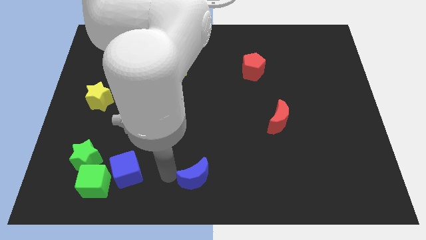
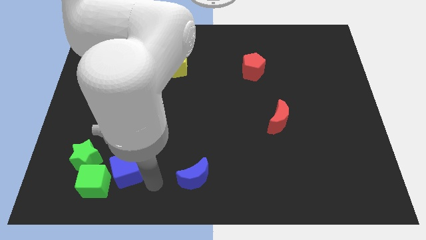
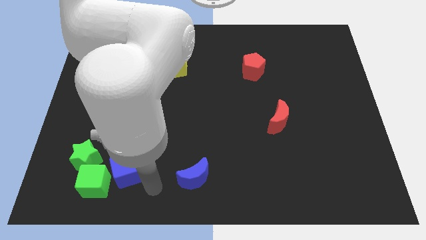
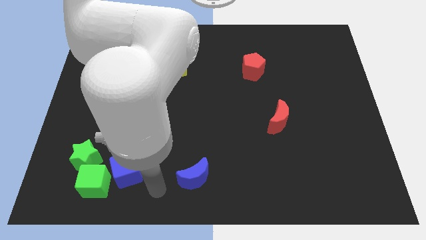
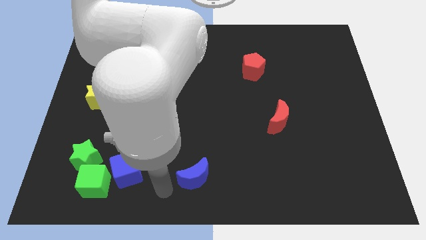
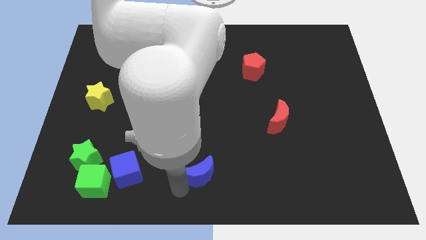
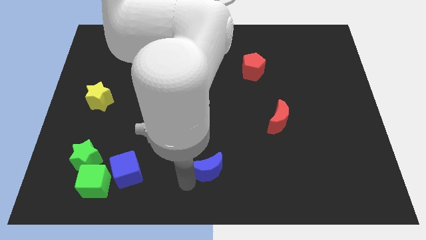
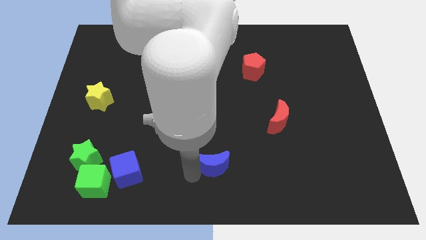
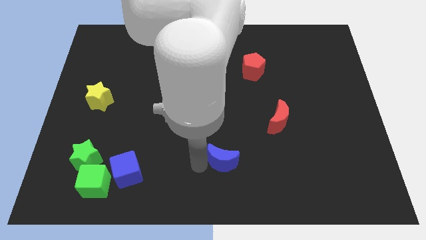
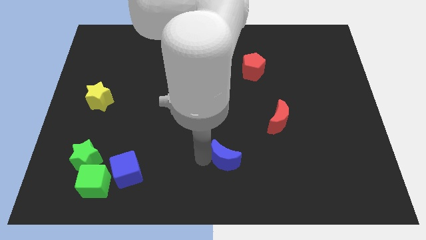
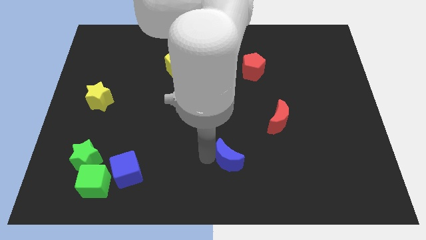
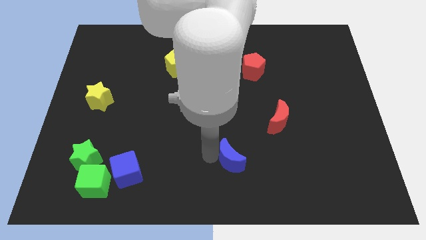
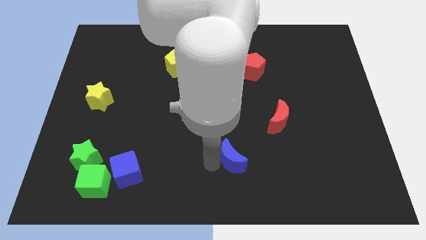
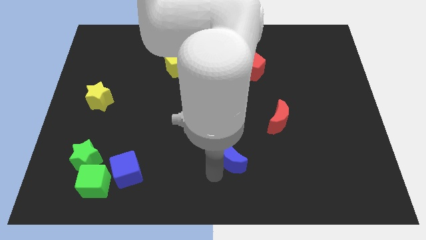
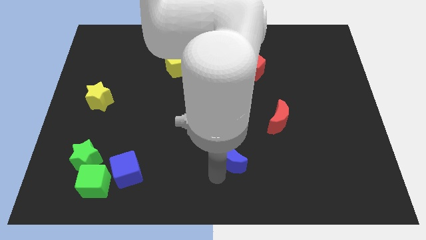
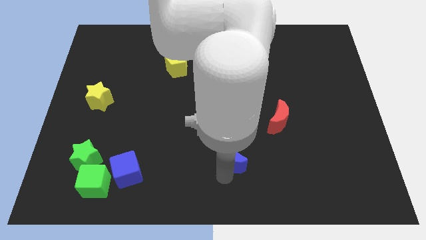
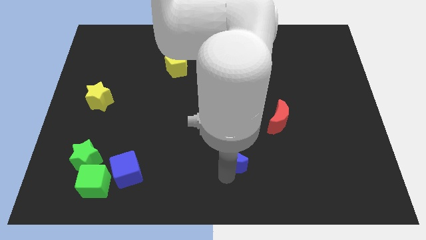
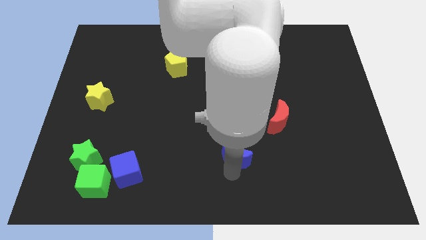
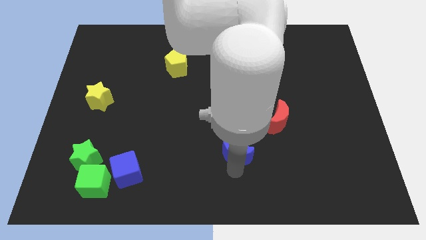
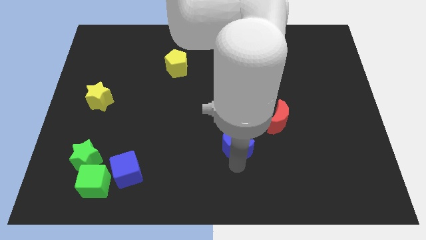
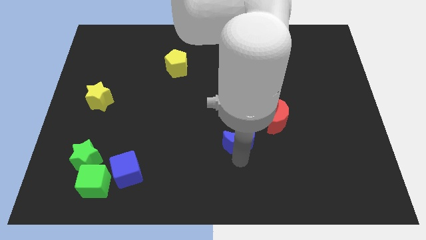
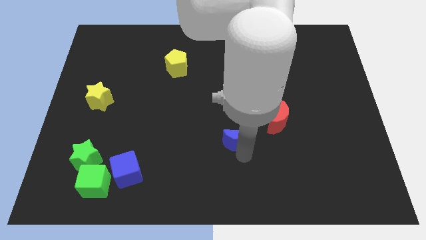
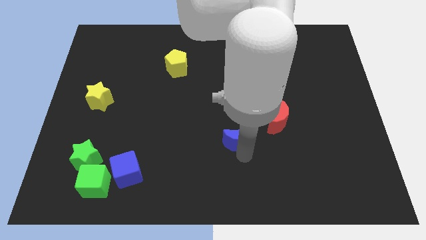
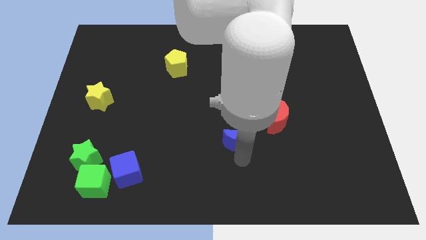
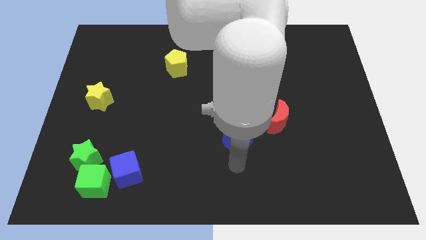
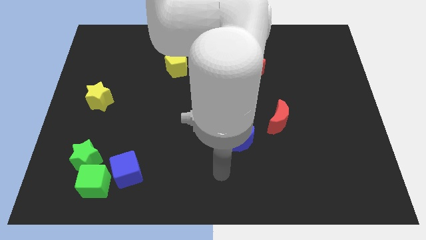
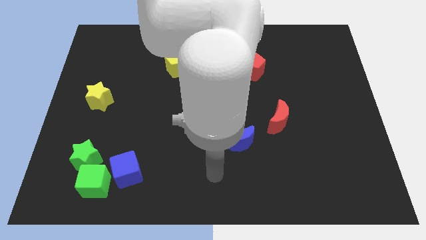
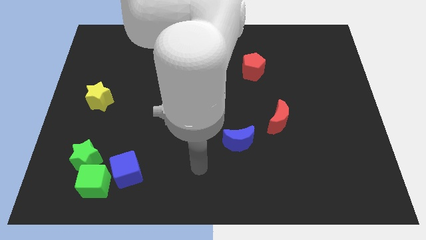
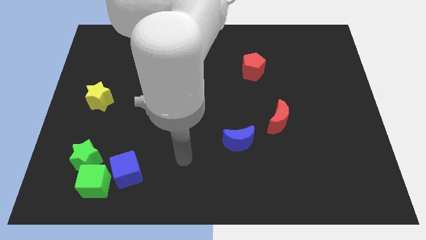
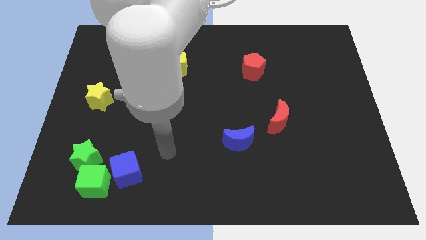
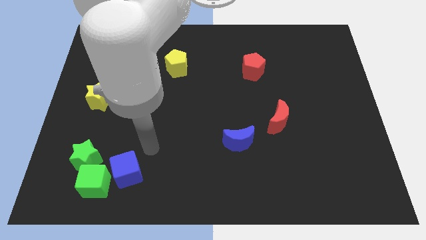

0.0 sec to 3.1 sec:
place the blue moon diagonally top right to blue cube

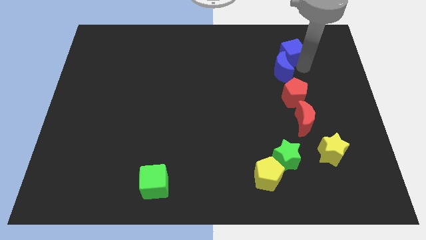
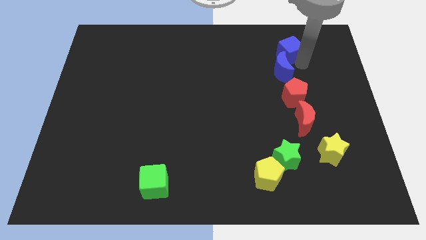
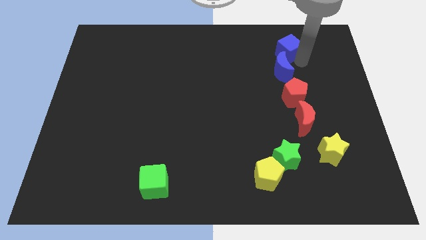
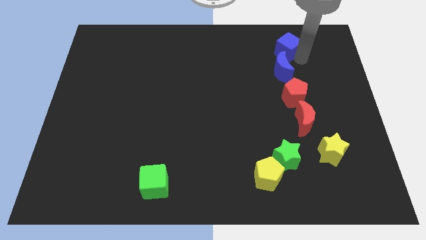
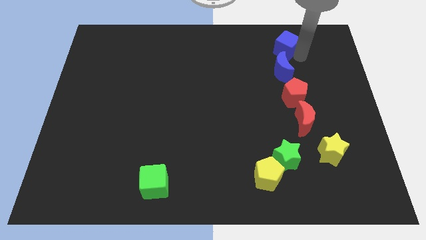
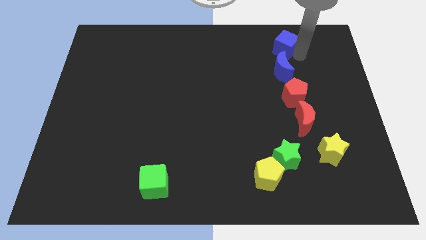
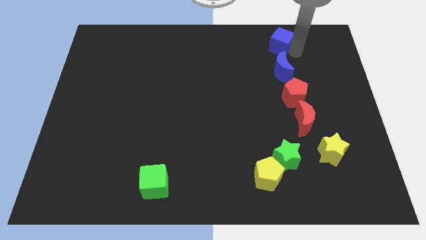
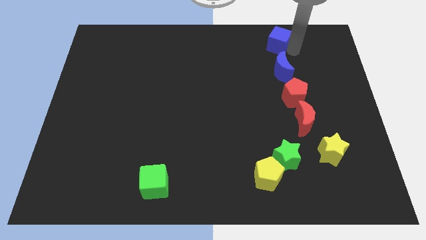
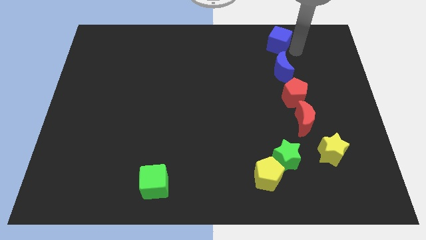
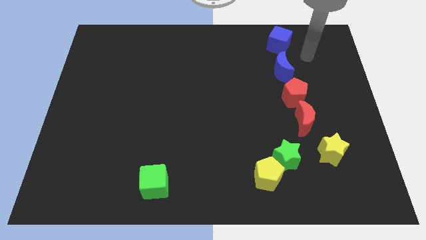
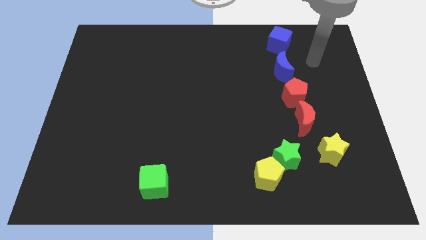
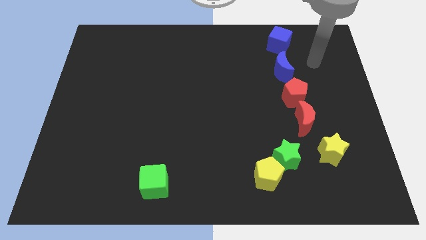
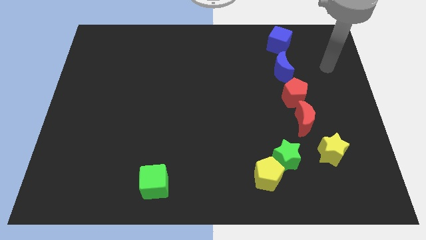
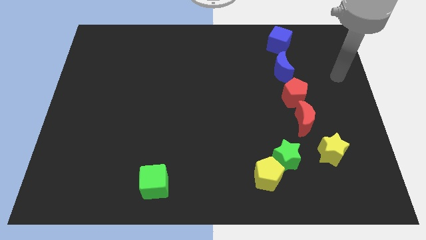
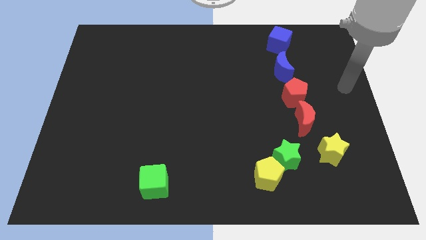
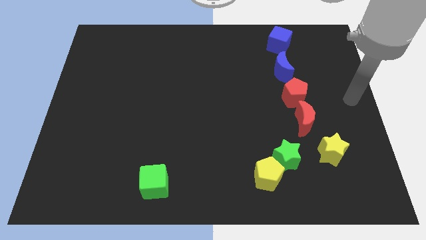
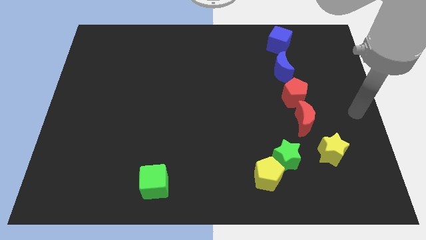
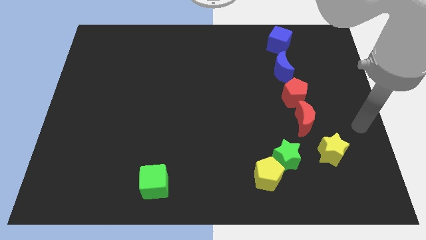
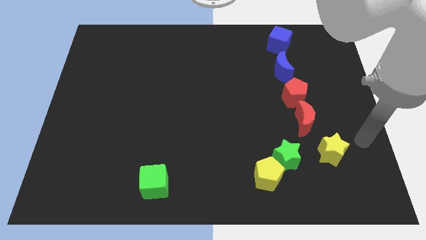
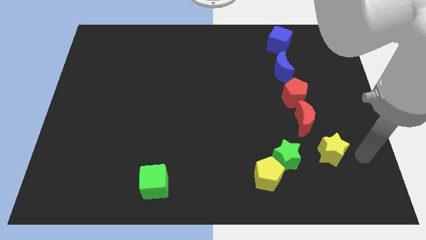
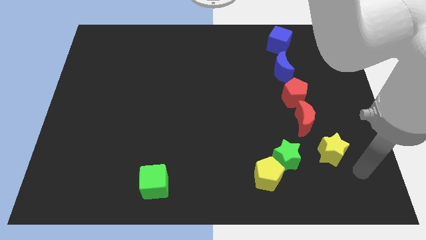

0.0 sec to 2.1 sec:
slide the blue cube vertically at the top of the blue crescent

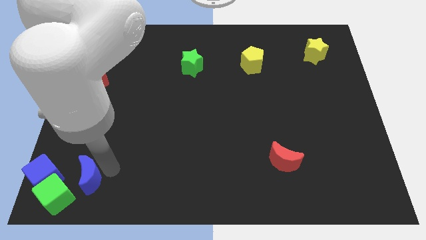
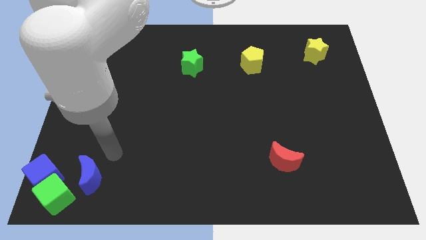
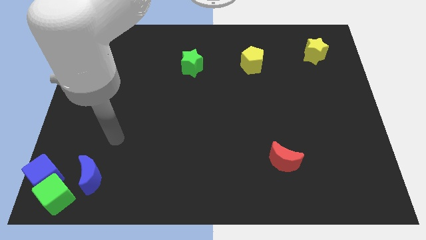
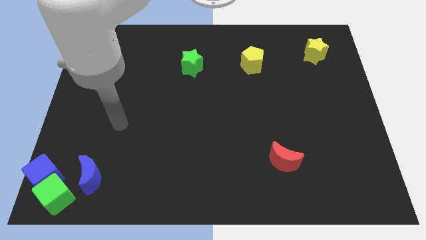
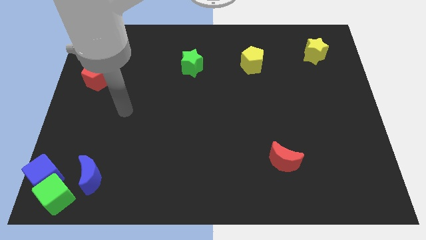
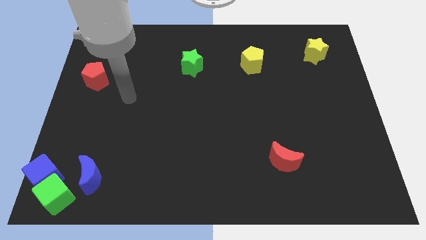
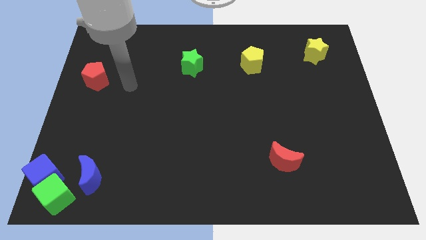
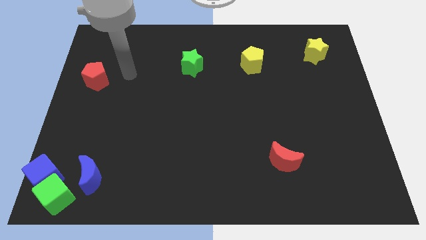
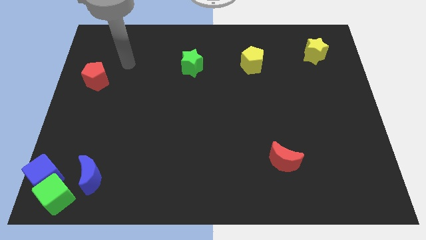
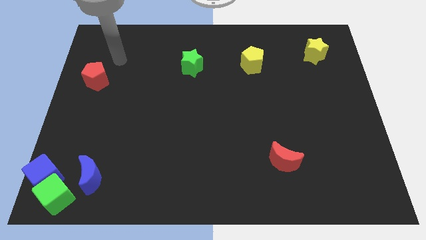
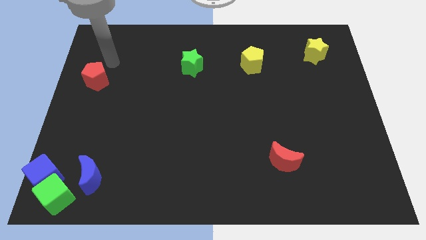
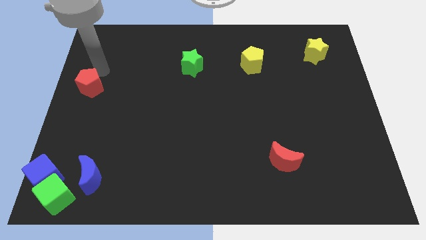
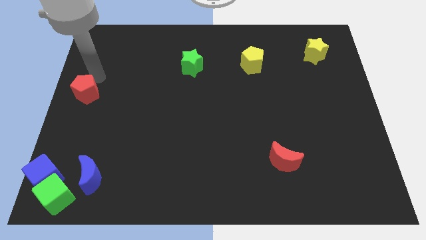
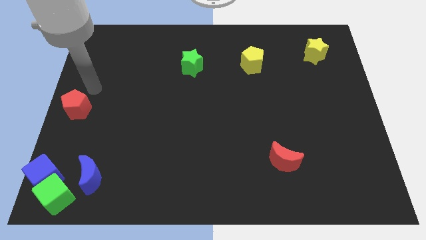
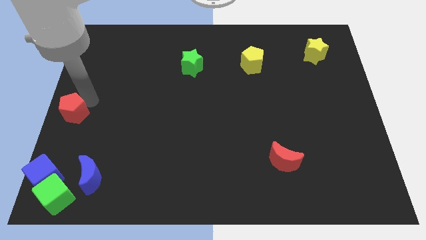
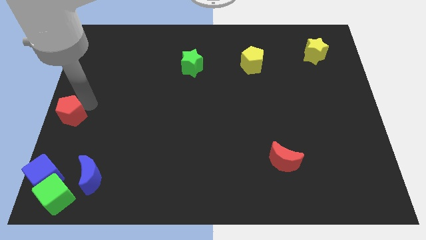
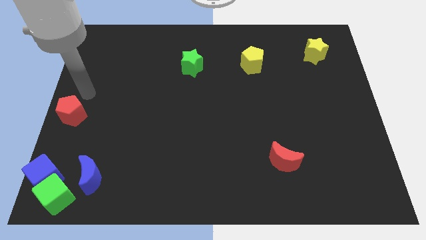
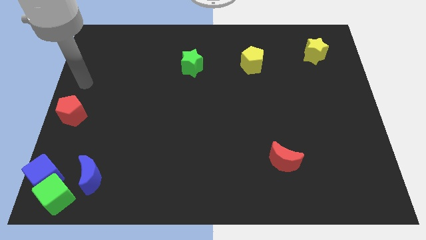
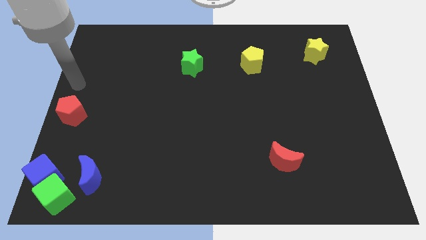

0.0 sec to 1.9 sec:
push the red pentagon to the center left of the board

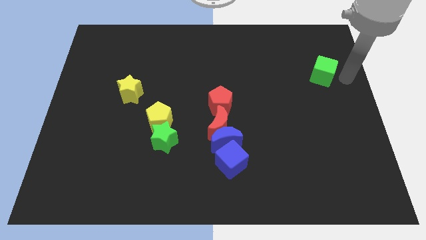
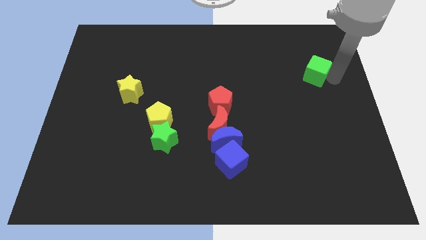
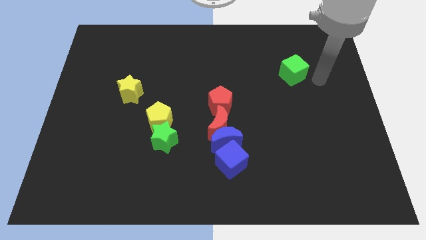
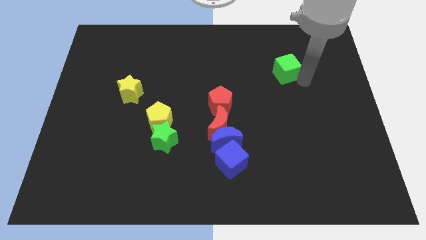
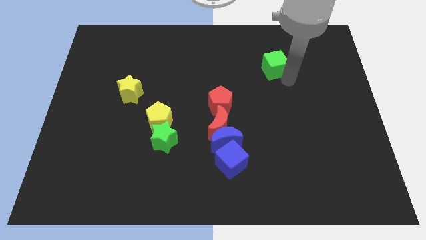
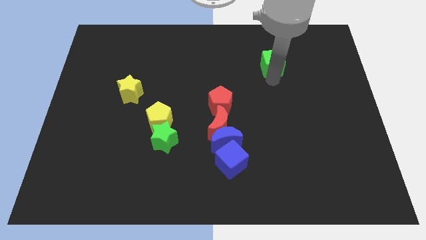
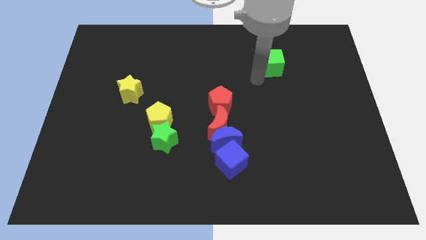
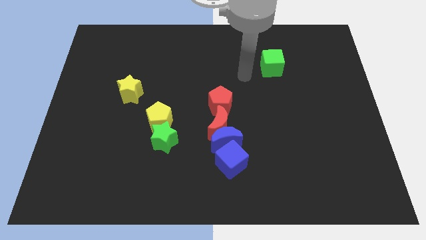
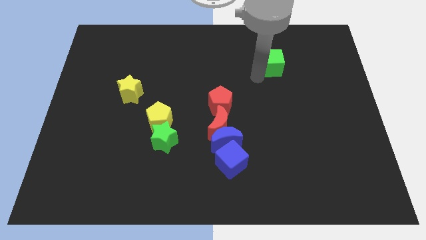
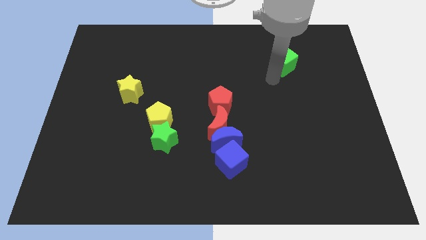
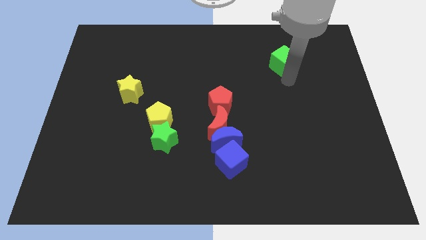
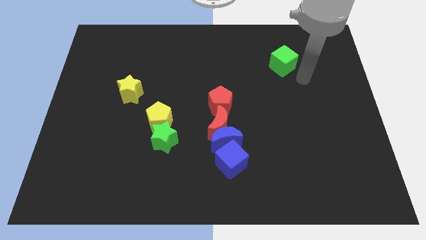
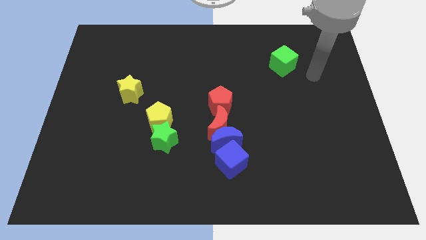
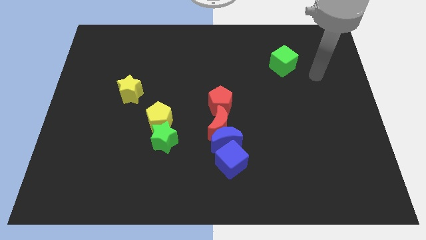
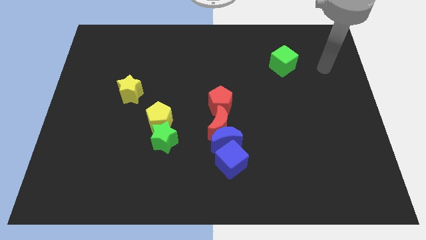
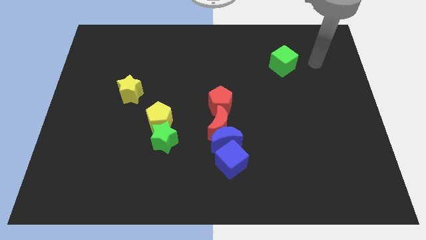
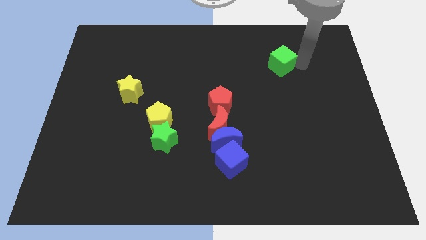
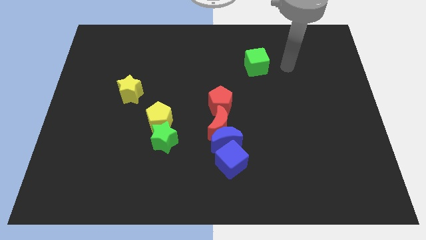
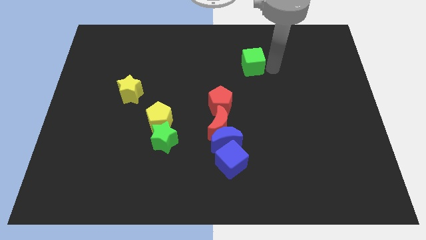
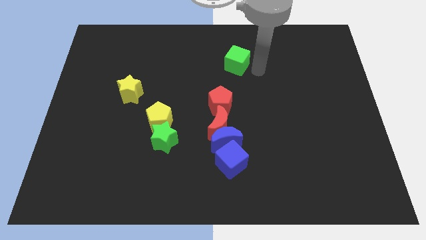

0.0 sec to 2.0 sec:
drag the green cube towards the left side of the board
